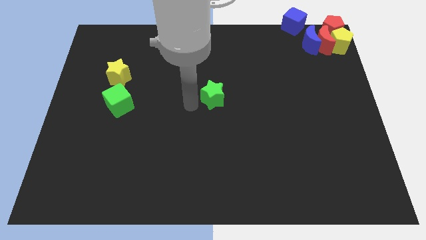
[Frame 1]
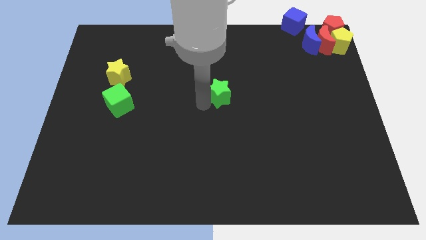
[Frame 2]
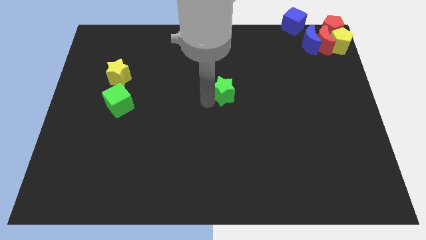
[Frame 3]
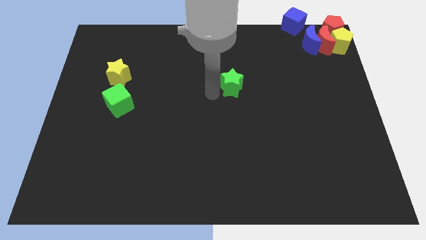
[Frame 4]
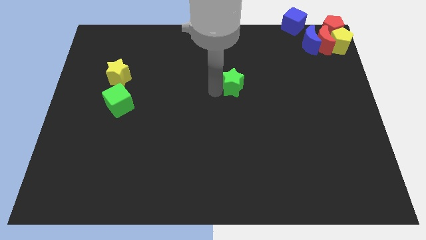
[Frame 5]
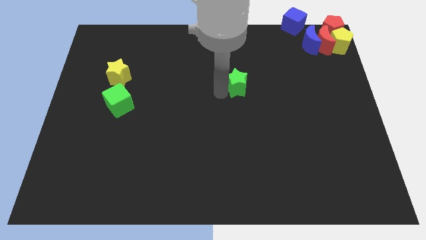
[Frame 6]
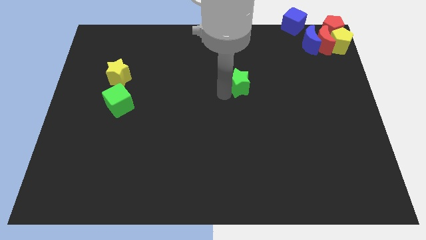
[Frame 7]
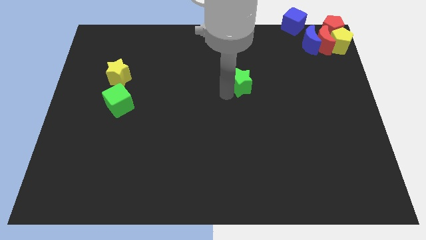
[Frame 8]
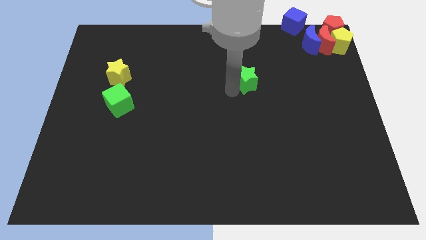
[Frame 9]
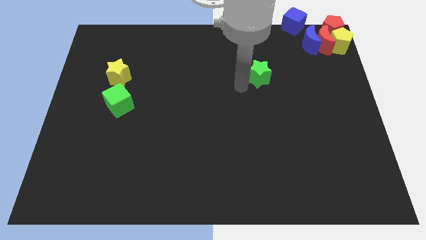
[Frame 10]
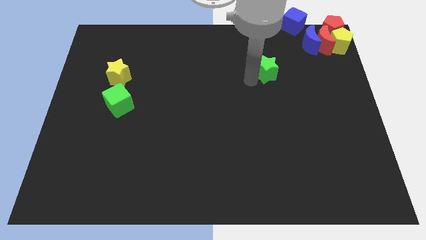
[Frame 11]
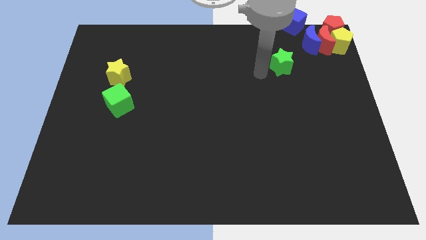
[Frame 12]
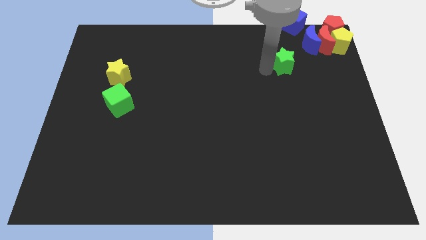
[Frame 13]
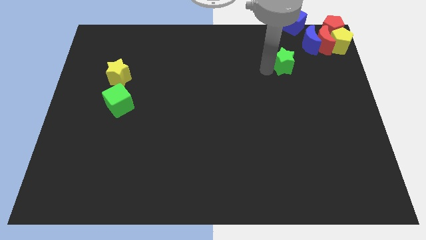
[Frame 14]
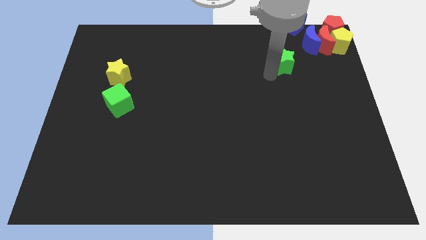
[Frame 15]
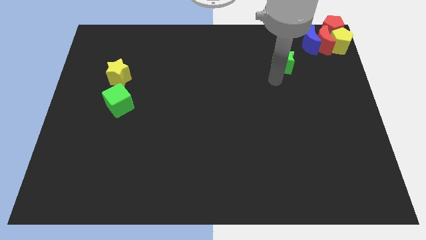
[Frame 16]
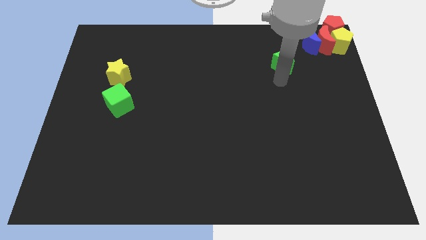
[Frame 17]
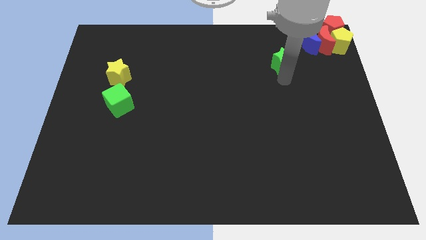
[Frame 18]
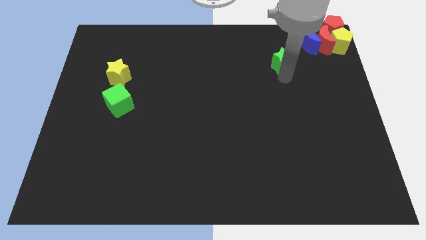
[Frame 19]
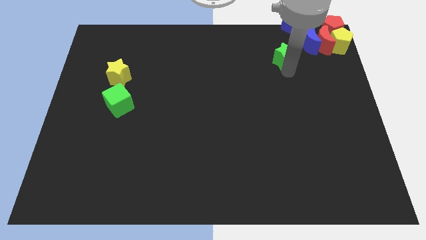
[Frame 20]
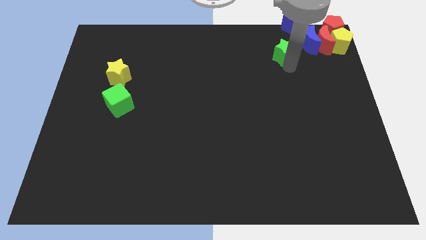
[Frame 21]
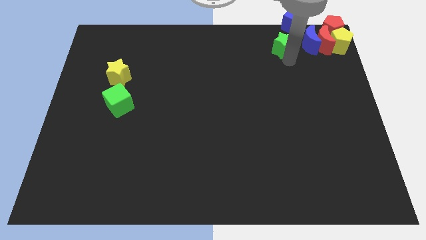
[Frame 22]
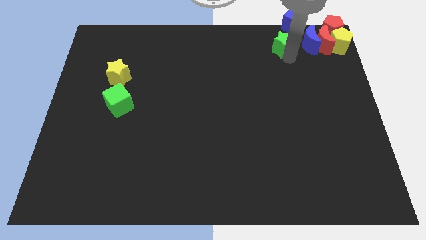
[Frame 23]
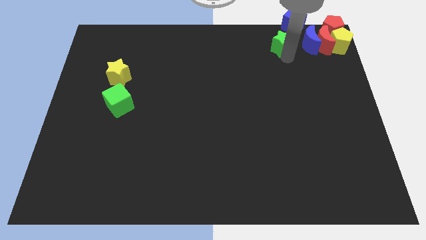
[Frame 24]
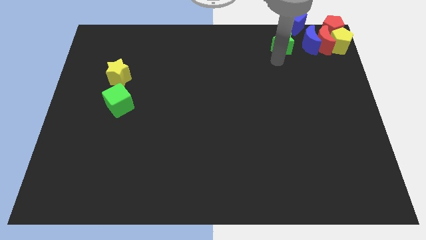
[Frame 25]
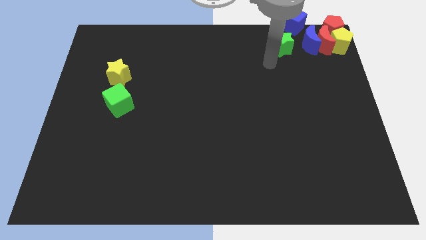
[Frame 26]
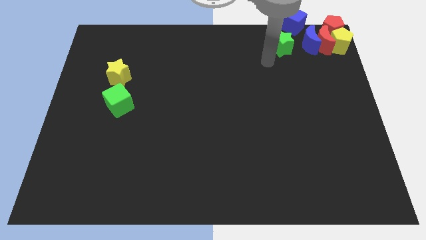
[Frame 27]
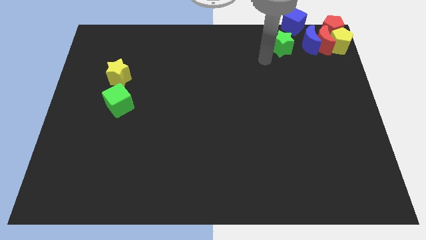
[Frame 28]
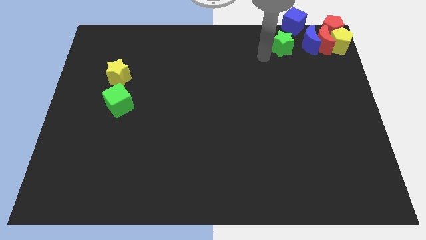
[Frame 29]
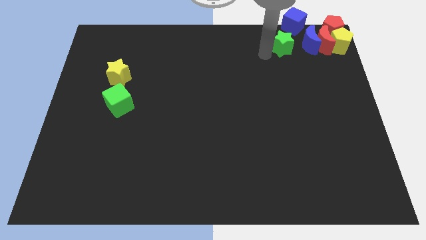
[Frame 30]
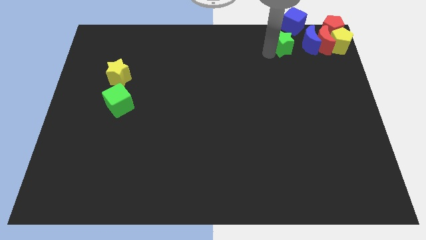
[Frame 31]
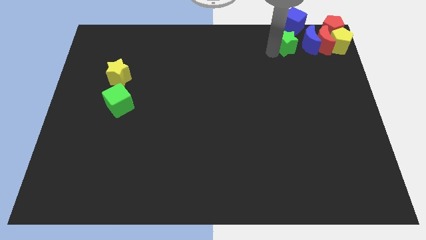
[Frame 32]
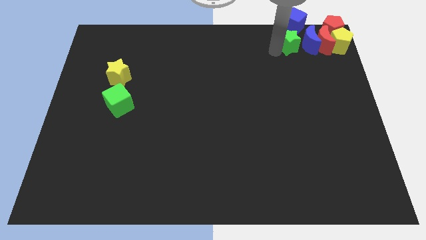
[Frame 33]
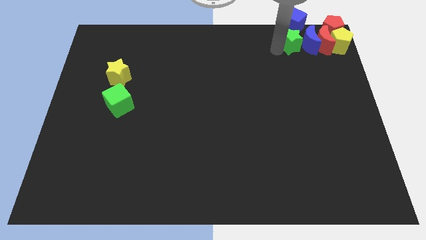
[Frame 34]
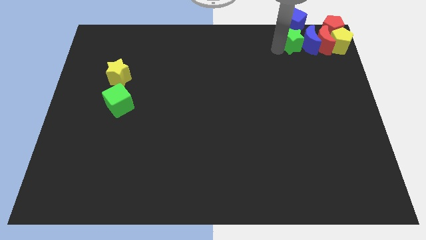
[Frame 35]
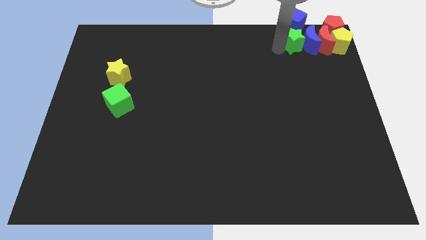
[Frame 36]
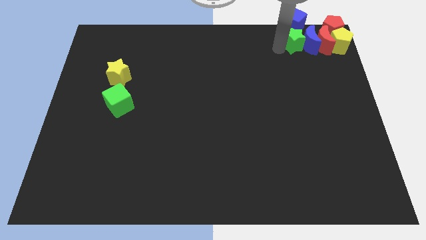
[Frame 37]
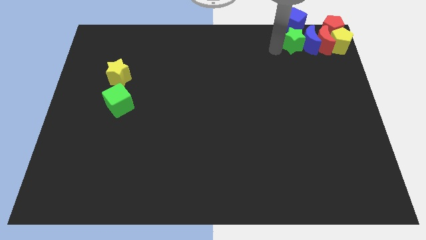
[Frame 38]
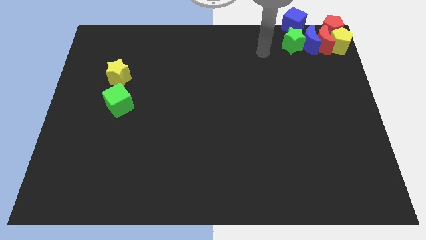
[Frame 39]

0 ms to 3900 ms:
move the green star into the blue cube and blue moon

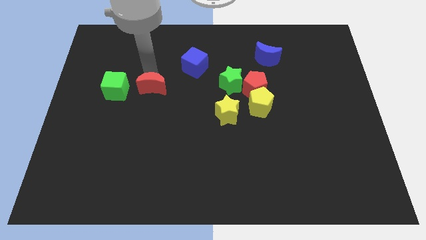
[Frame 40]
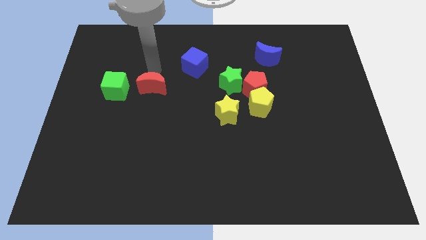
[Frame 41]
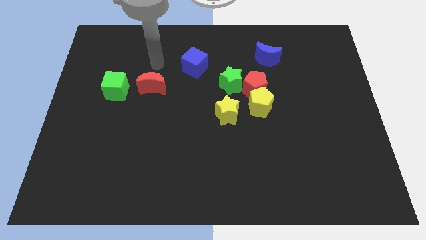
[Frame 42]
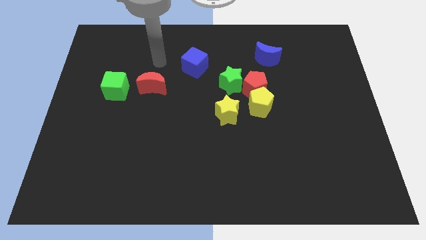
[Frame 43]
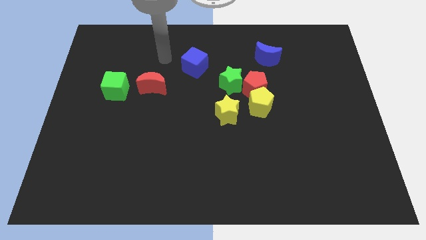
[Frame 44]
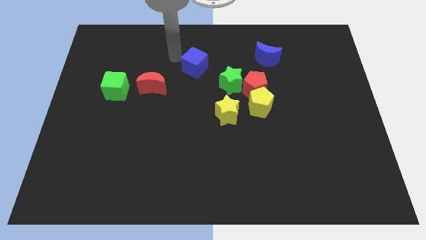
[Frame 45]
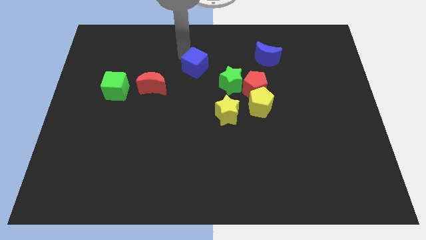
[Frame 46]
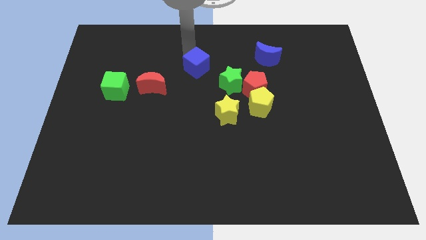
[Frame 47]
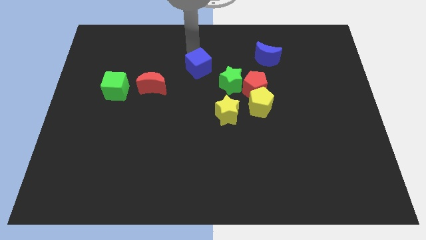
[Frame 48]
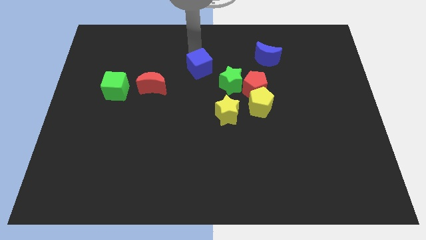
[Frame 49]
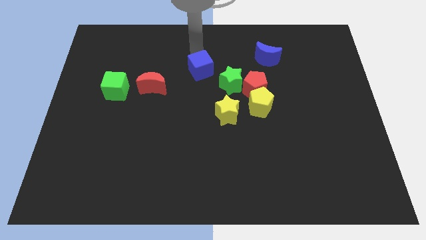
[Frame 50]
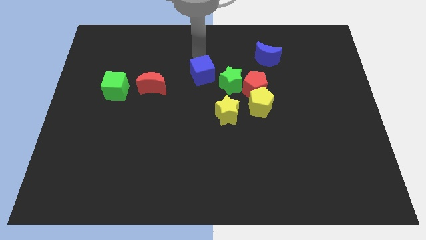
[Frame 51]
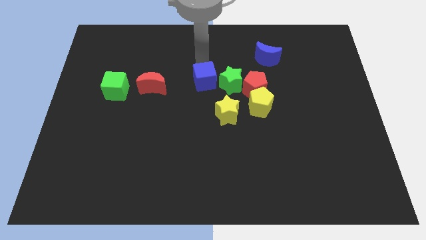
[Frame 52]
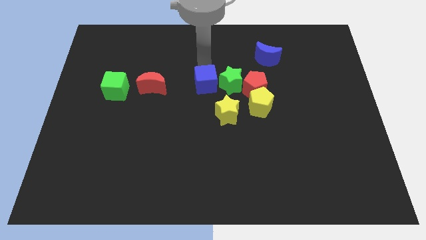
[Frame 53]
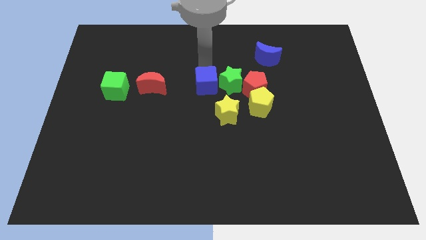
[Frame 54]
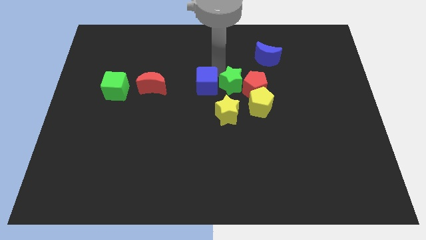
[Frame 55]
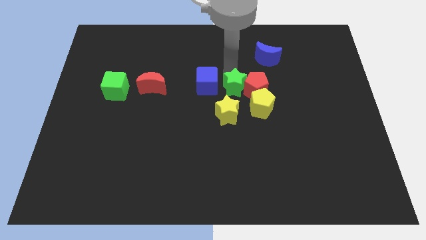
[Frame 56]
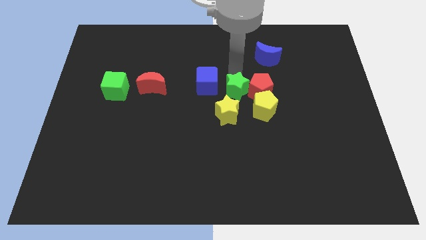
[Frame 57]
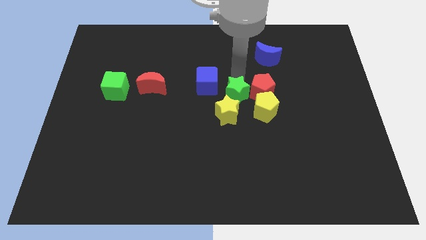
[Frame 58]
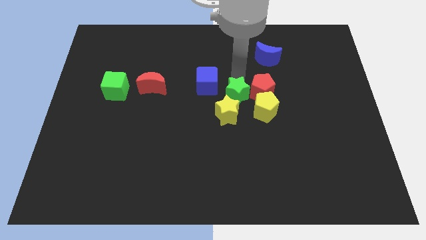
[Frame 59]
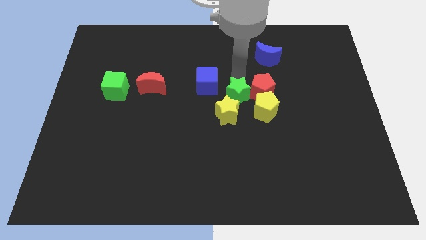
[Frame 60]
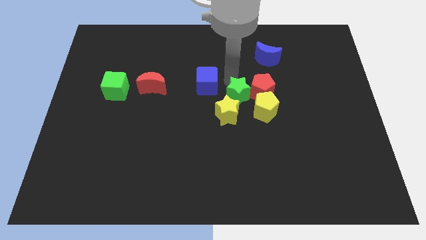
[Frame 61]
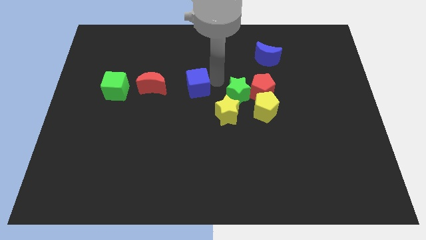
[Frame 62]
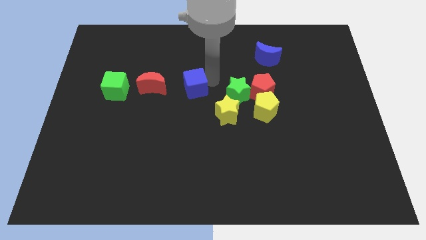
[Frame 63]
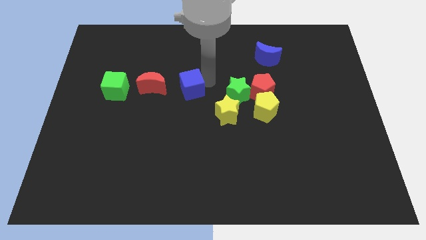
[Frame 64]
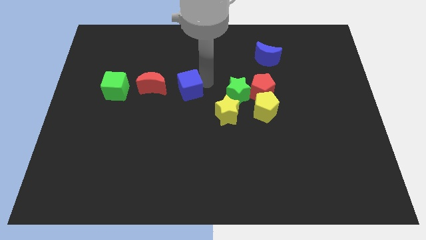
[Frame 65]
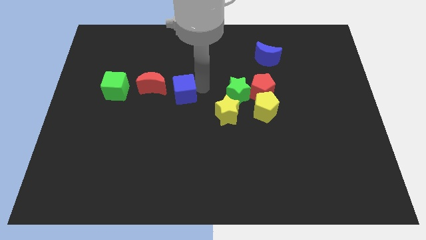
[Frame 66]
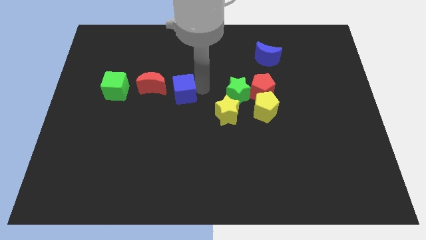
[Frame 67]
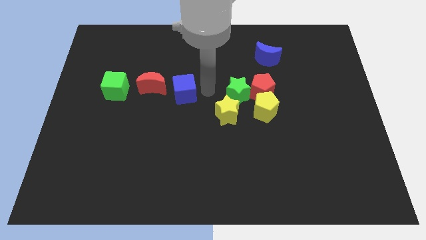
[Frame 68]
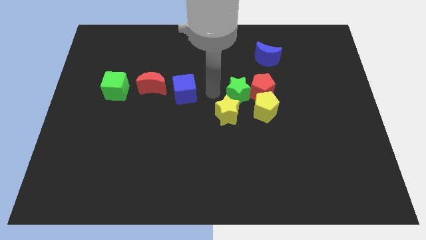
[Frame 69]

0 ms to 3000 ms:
put the blue cube to the right of the red crescent

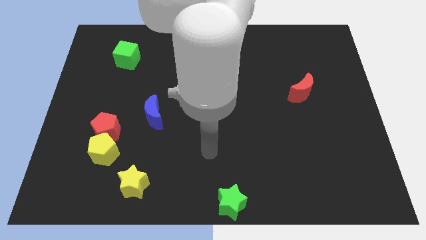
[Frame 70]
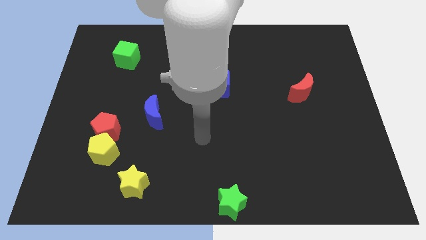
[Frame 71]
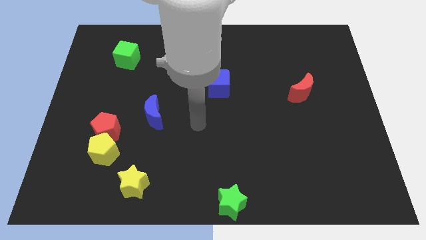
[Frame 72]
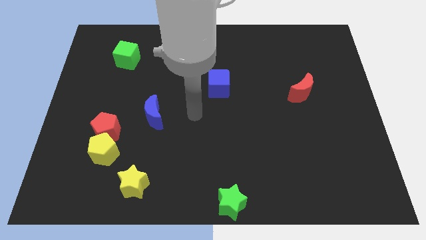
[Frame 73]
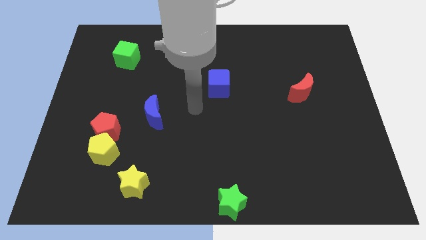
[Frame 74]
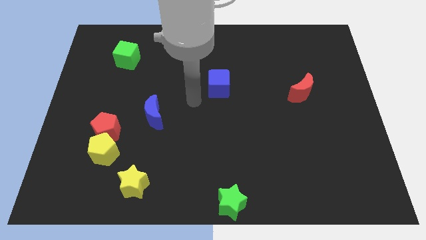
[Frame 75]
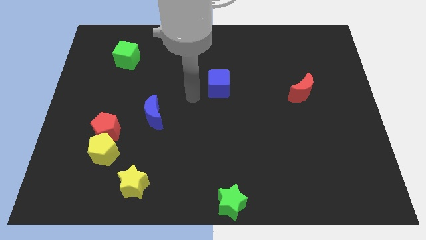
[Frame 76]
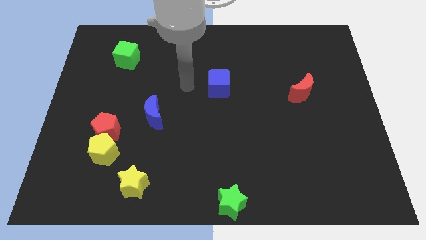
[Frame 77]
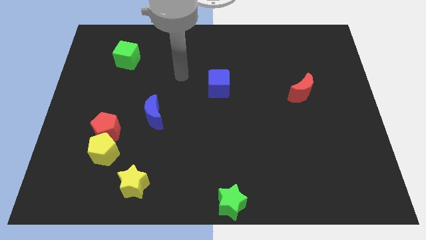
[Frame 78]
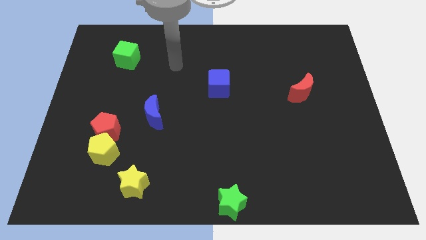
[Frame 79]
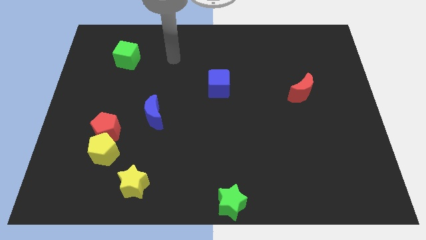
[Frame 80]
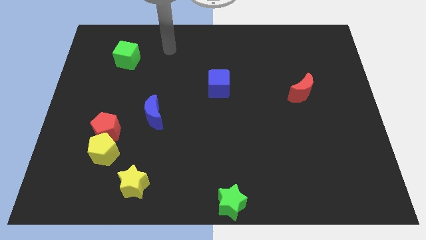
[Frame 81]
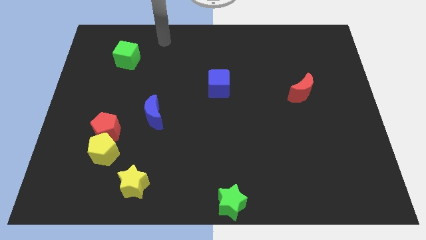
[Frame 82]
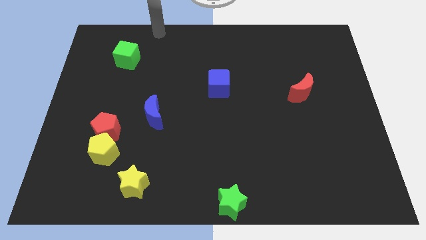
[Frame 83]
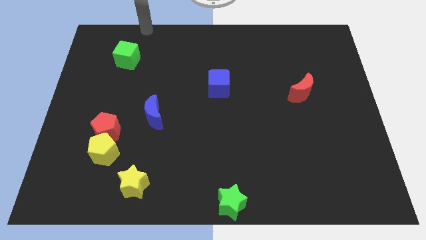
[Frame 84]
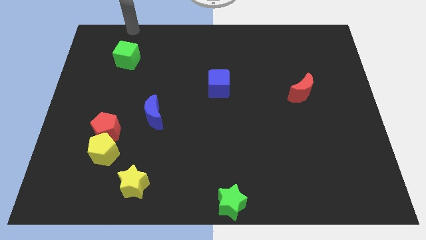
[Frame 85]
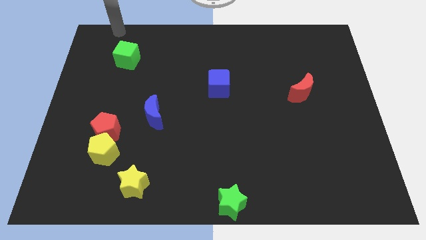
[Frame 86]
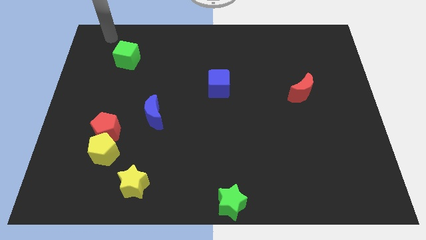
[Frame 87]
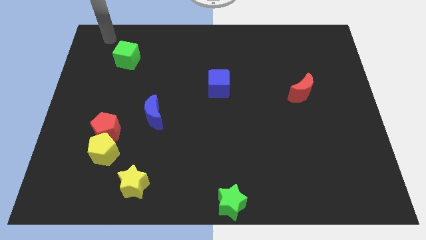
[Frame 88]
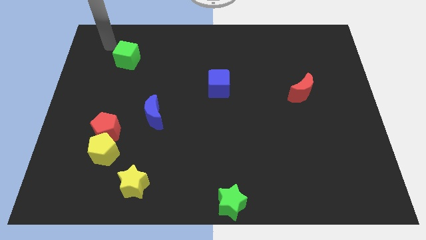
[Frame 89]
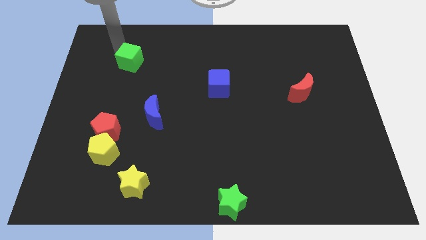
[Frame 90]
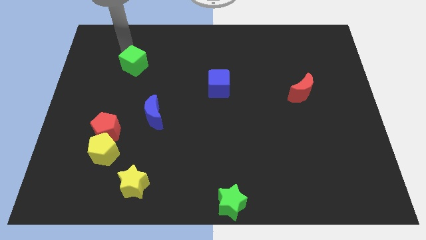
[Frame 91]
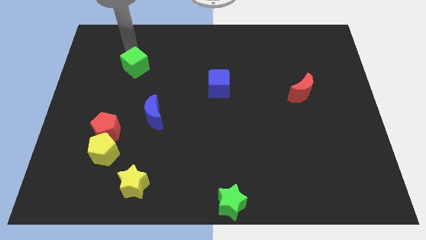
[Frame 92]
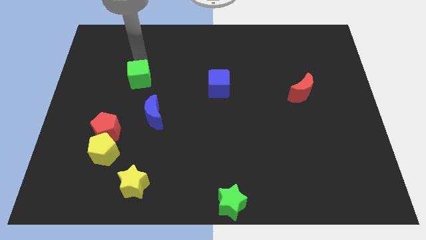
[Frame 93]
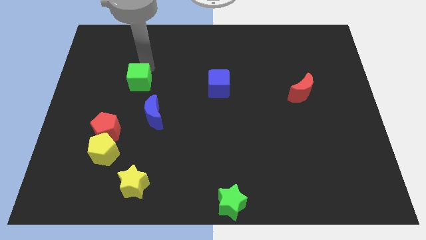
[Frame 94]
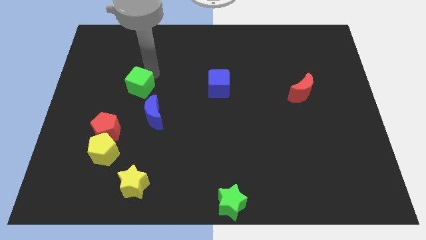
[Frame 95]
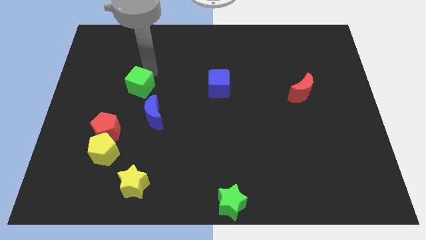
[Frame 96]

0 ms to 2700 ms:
push green cube towards blue crescent
